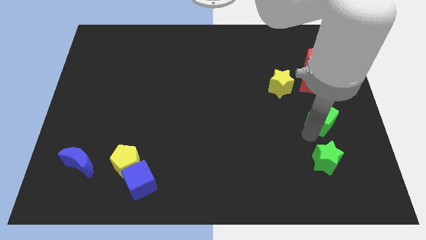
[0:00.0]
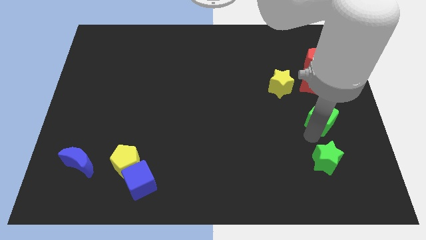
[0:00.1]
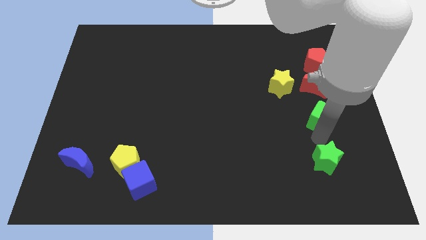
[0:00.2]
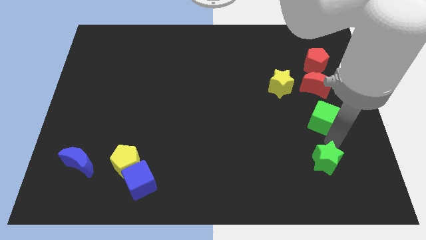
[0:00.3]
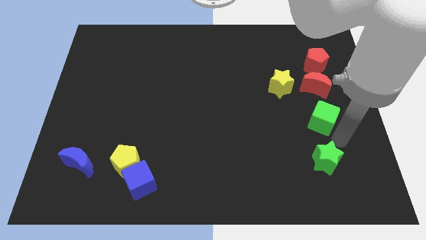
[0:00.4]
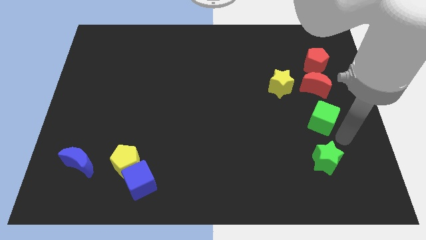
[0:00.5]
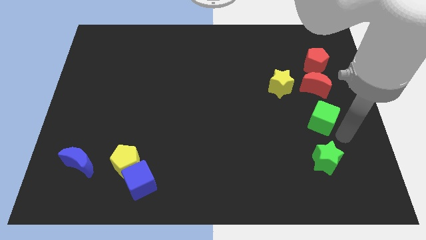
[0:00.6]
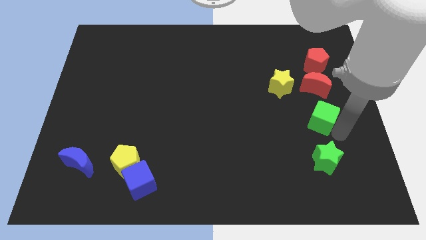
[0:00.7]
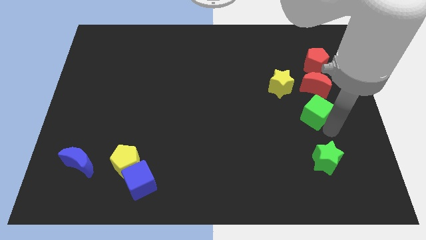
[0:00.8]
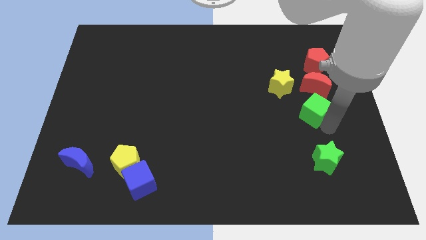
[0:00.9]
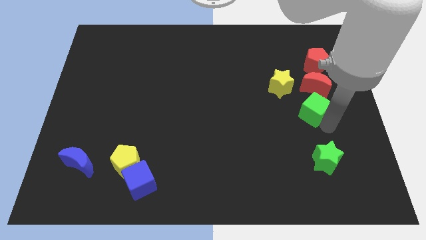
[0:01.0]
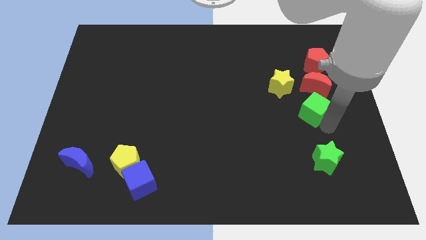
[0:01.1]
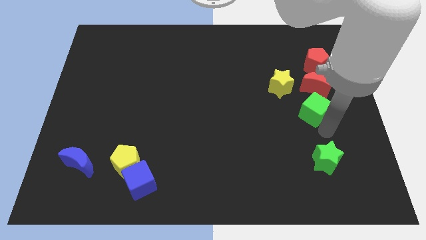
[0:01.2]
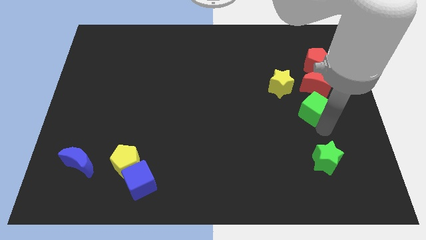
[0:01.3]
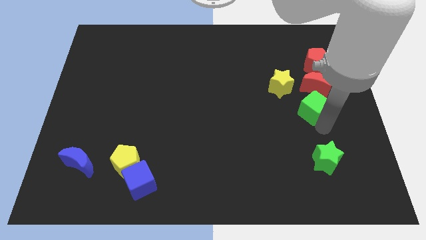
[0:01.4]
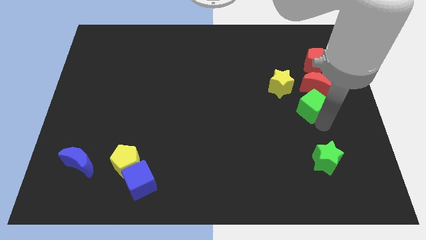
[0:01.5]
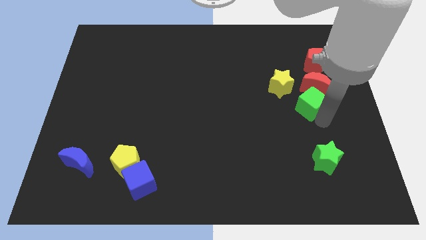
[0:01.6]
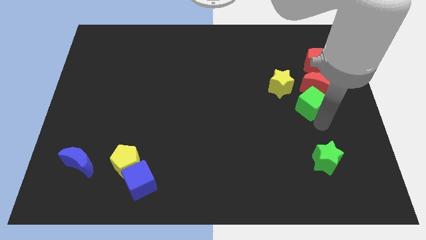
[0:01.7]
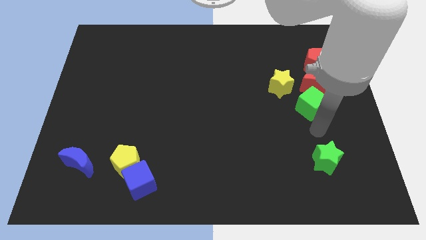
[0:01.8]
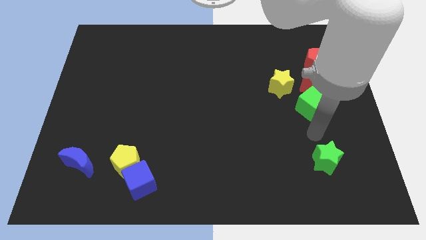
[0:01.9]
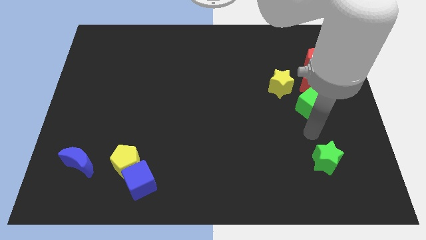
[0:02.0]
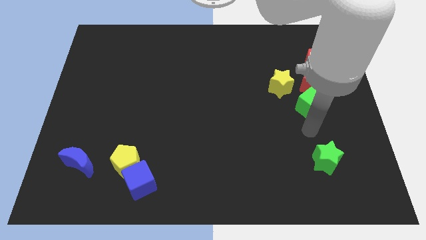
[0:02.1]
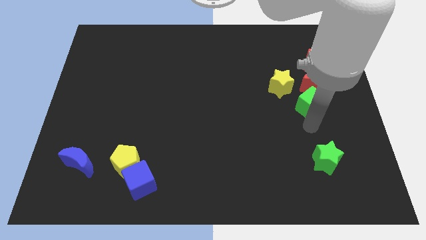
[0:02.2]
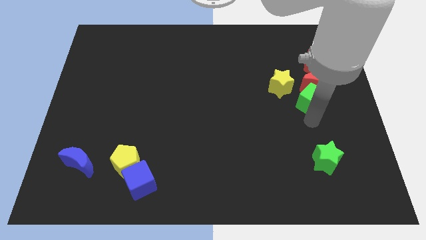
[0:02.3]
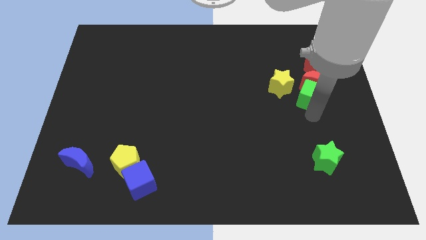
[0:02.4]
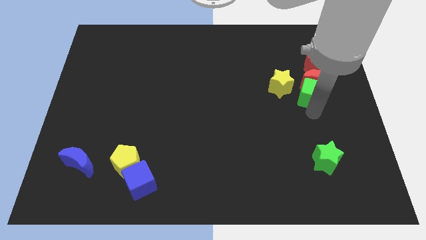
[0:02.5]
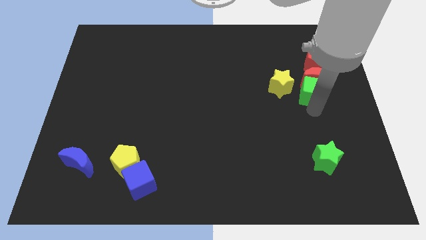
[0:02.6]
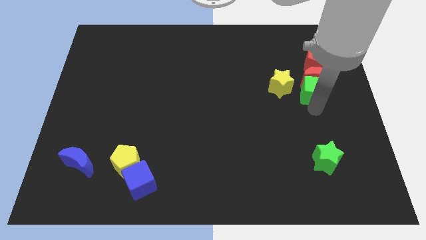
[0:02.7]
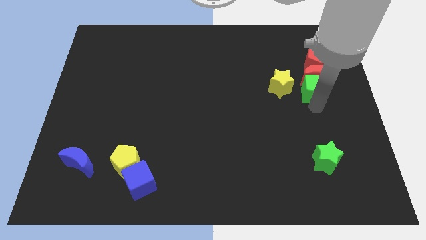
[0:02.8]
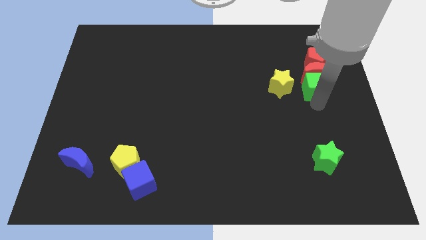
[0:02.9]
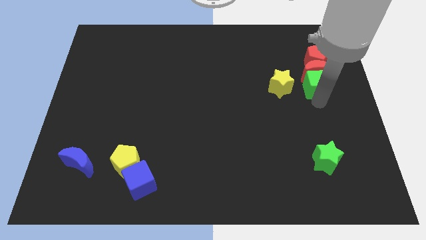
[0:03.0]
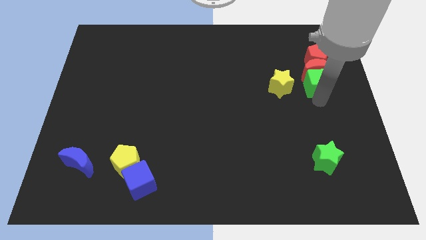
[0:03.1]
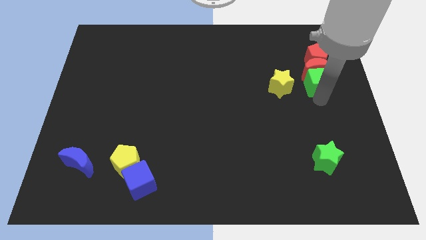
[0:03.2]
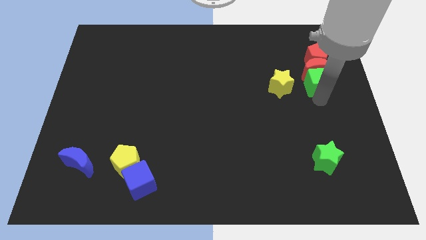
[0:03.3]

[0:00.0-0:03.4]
place green cube beside yellow star

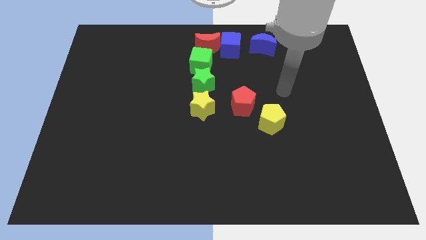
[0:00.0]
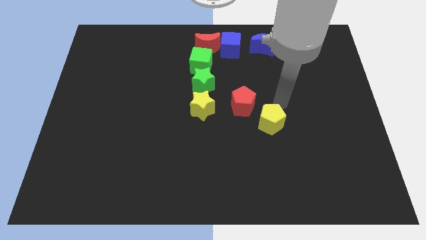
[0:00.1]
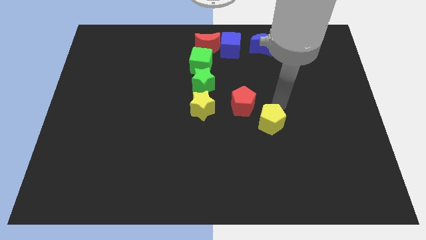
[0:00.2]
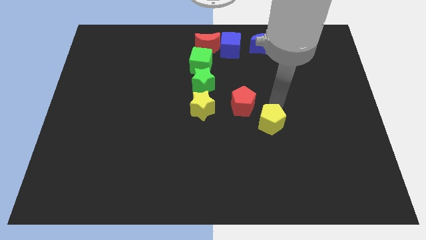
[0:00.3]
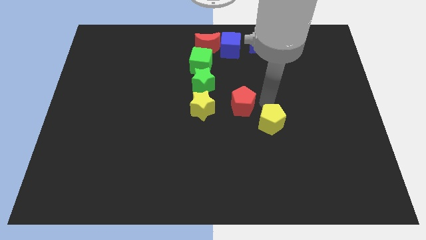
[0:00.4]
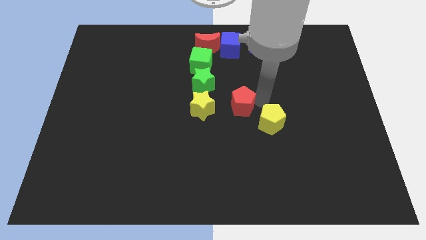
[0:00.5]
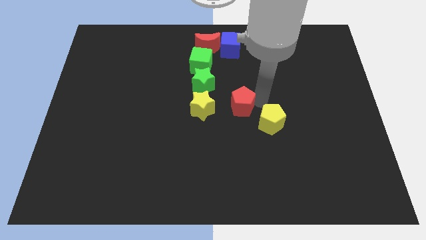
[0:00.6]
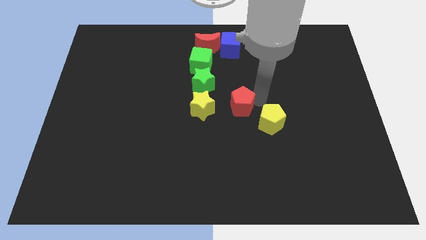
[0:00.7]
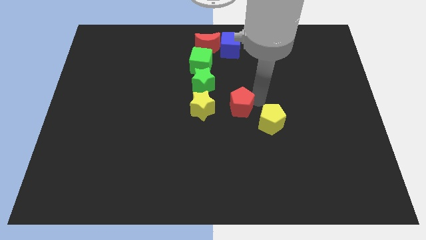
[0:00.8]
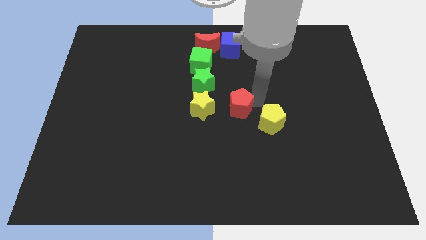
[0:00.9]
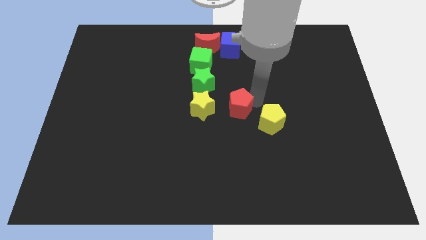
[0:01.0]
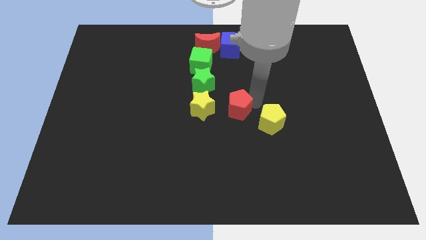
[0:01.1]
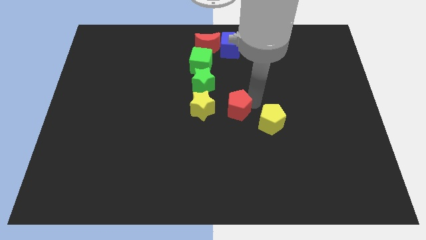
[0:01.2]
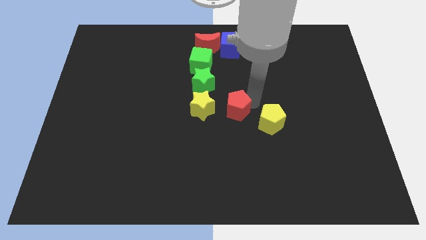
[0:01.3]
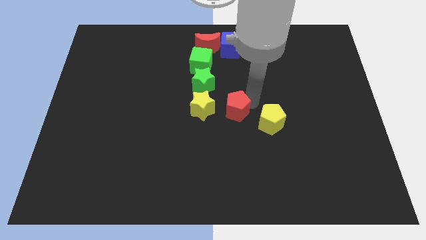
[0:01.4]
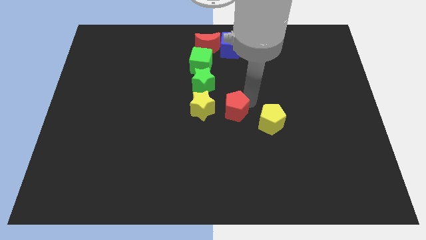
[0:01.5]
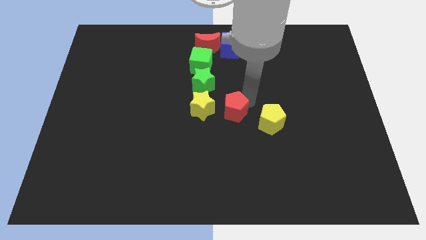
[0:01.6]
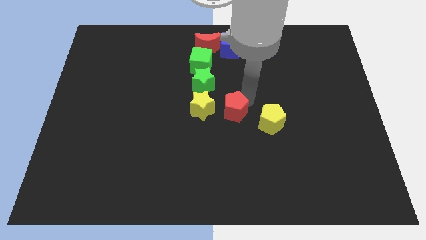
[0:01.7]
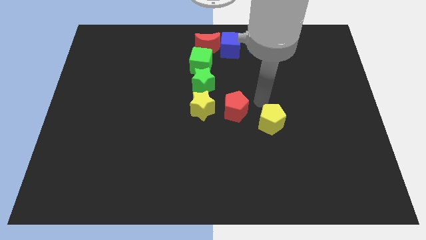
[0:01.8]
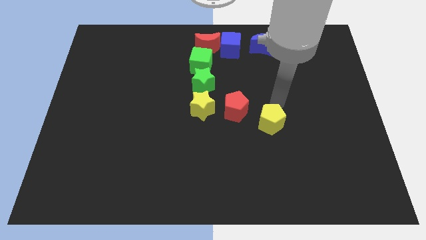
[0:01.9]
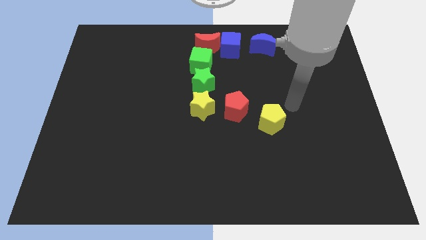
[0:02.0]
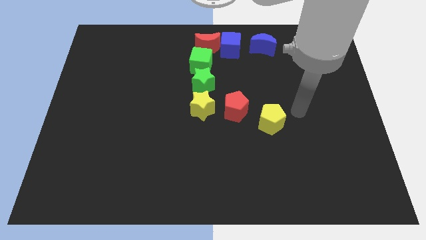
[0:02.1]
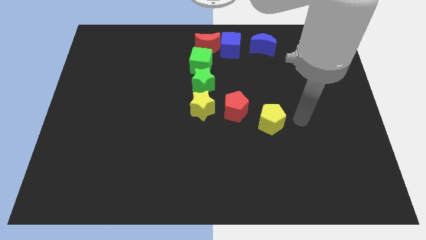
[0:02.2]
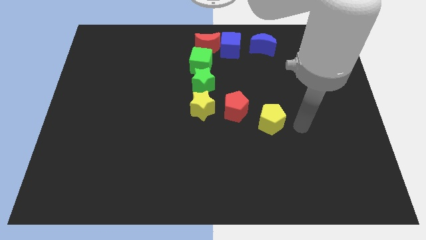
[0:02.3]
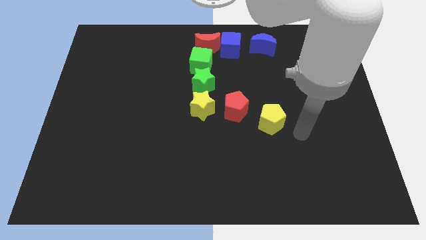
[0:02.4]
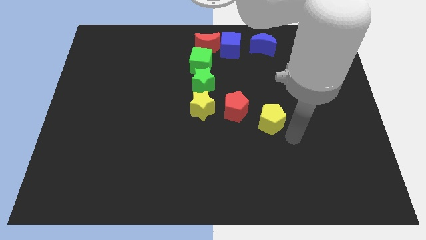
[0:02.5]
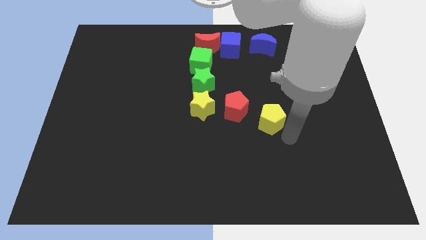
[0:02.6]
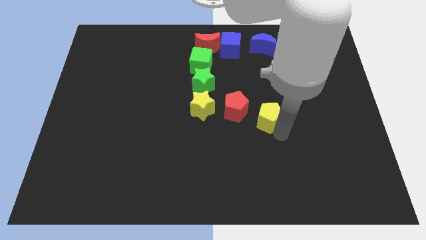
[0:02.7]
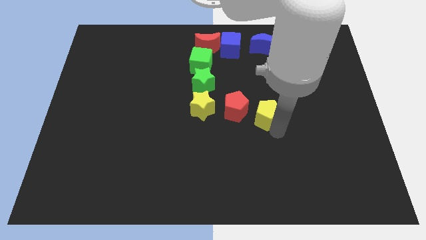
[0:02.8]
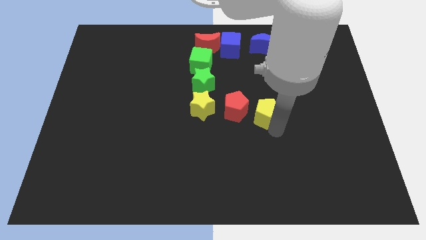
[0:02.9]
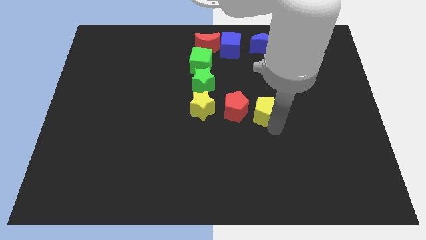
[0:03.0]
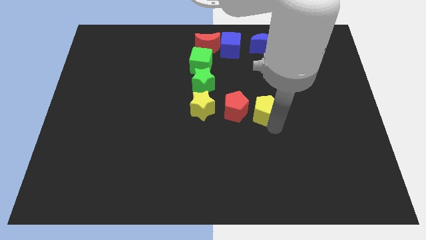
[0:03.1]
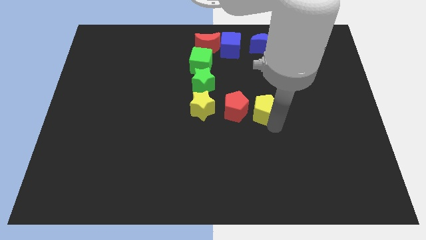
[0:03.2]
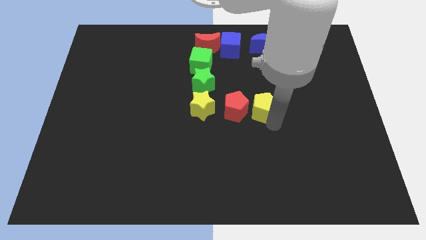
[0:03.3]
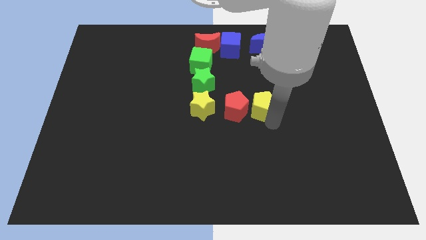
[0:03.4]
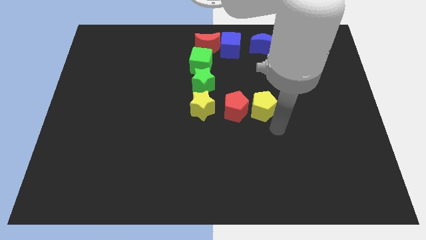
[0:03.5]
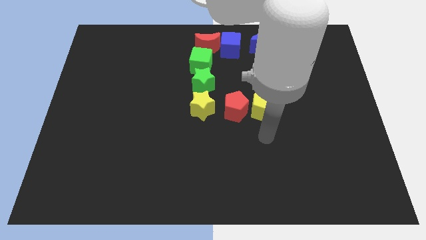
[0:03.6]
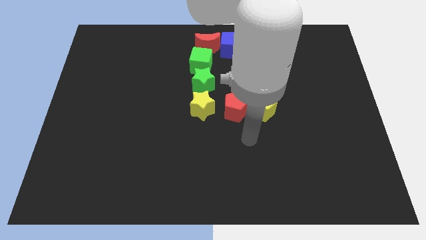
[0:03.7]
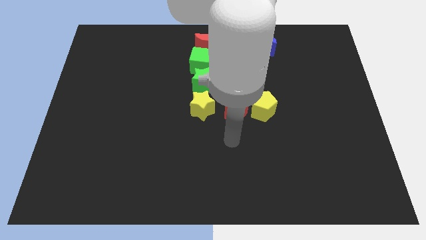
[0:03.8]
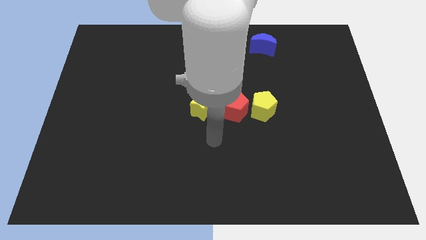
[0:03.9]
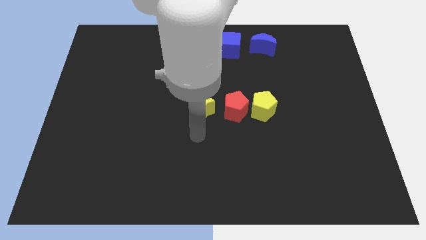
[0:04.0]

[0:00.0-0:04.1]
adjust red and yellow pentagons to make a line with yellow star

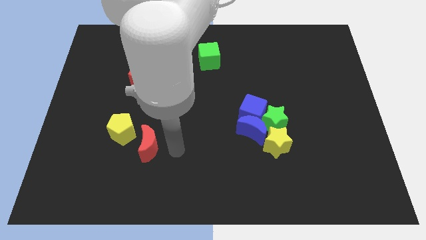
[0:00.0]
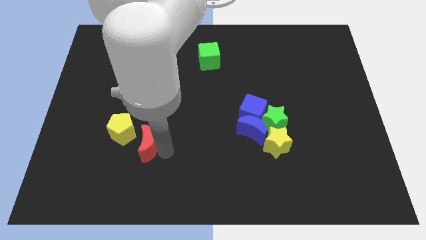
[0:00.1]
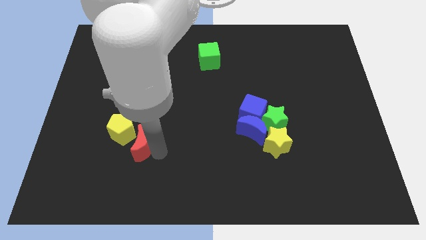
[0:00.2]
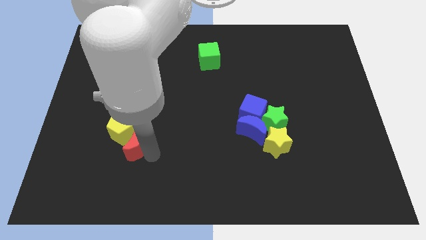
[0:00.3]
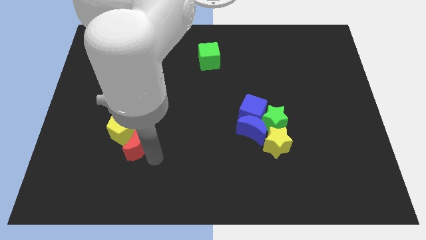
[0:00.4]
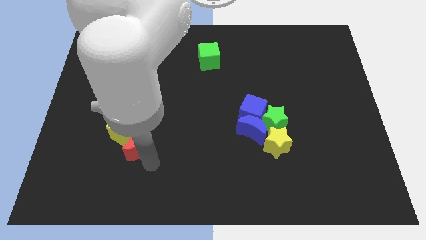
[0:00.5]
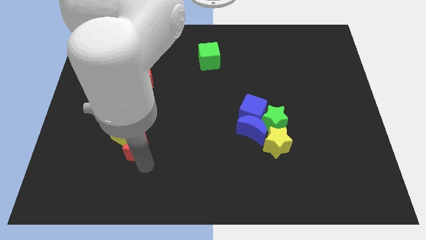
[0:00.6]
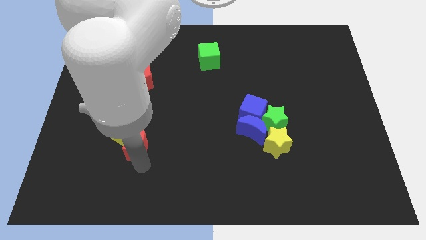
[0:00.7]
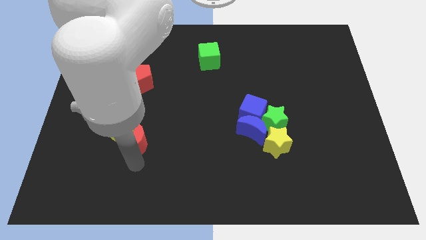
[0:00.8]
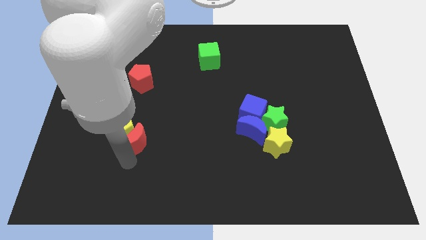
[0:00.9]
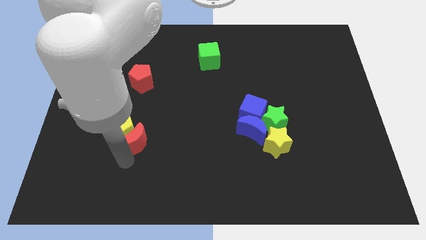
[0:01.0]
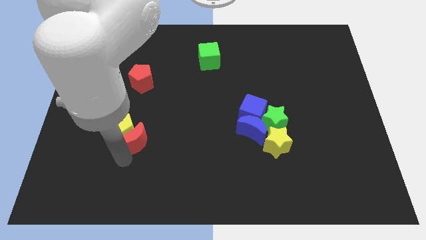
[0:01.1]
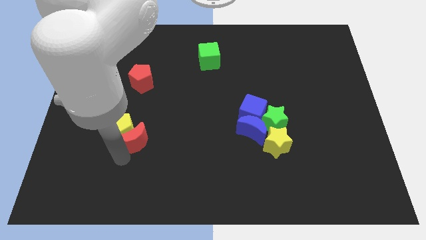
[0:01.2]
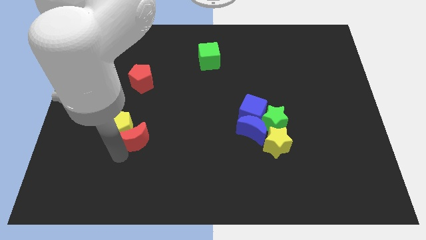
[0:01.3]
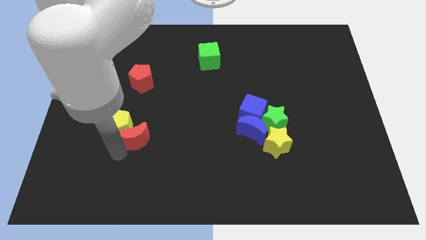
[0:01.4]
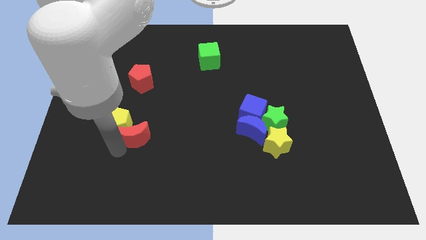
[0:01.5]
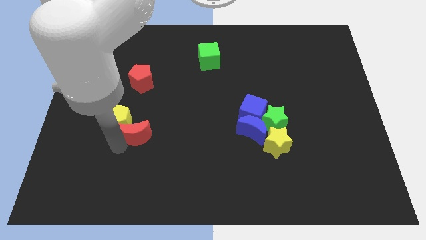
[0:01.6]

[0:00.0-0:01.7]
move the red crescent to the right of the yellow pentagon
